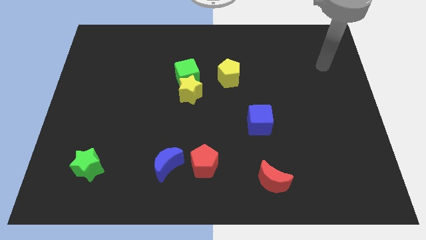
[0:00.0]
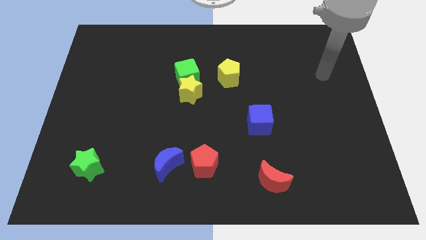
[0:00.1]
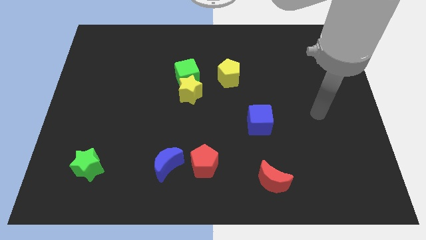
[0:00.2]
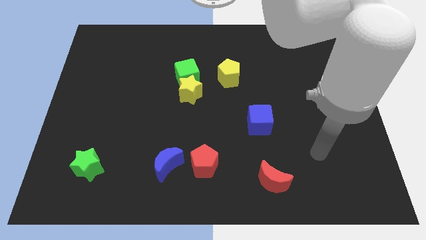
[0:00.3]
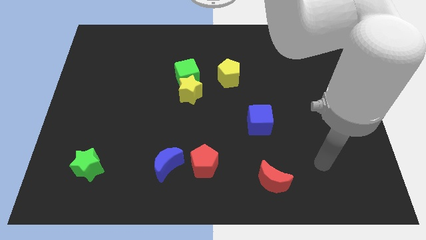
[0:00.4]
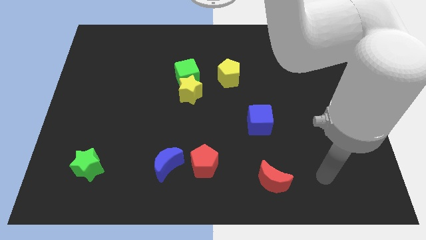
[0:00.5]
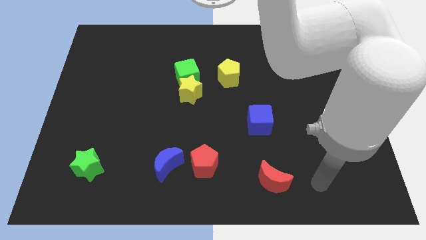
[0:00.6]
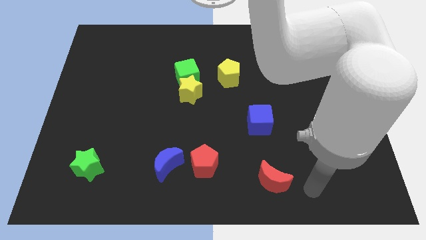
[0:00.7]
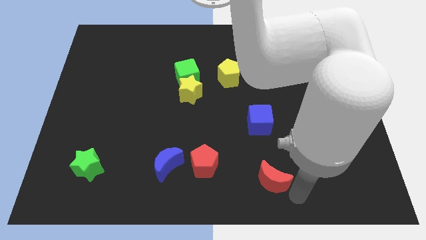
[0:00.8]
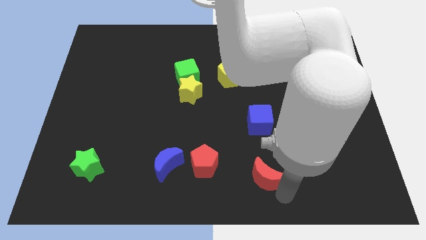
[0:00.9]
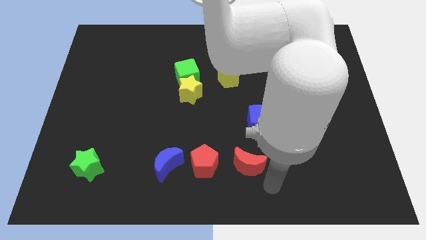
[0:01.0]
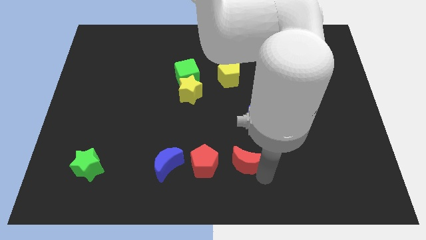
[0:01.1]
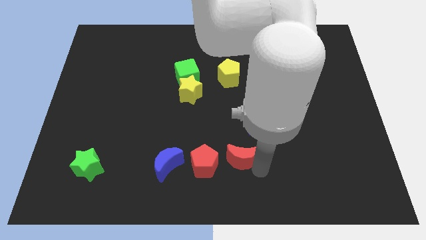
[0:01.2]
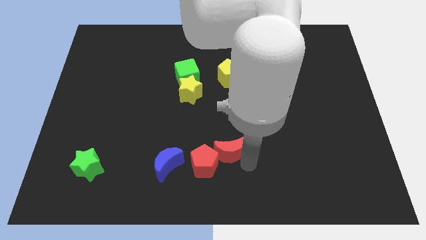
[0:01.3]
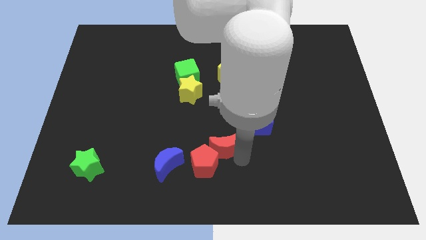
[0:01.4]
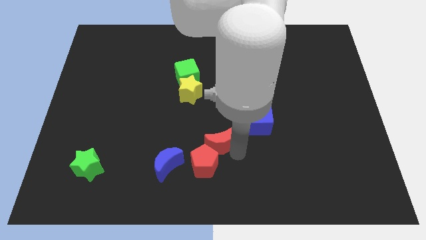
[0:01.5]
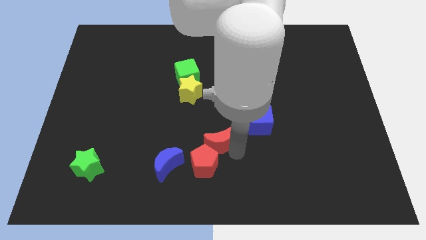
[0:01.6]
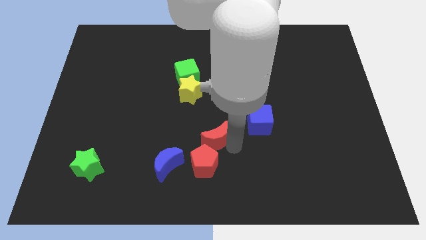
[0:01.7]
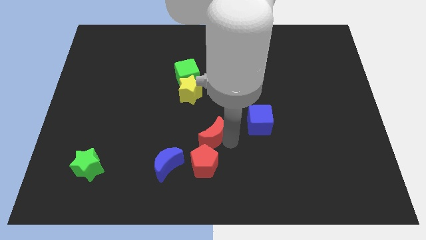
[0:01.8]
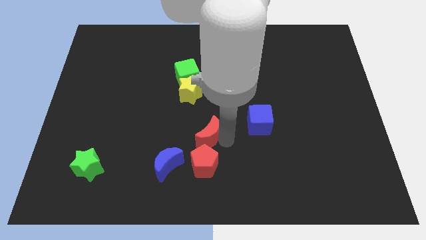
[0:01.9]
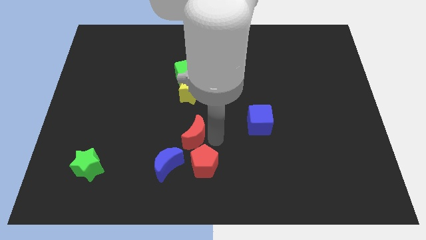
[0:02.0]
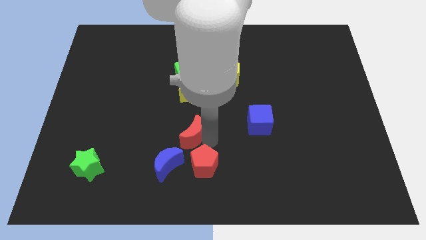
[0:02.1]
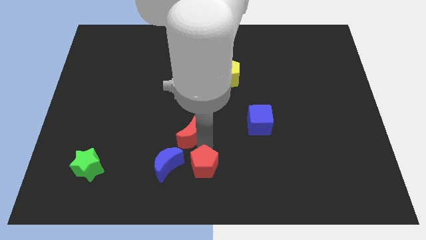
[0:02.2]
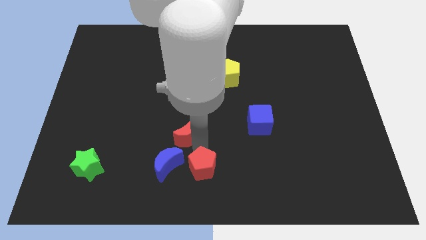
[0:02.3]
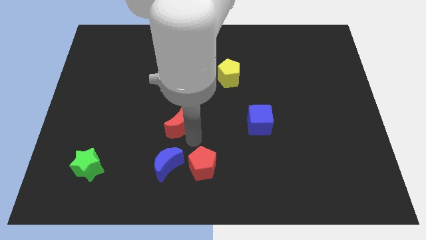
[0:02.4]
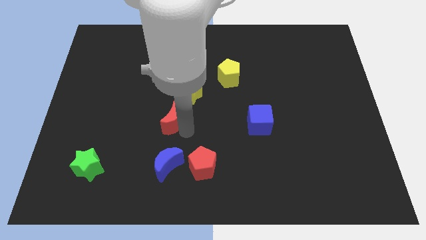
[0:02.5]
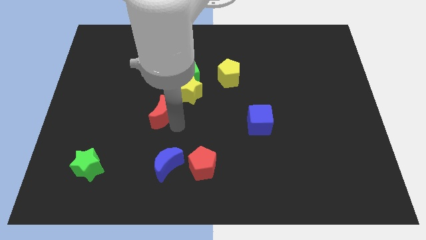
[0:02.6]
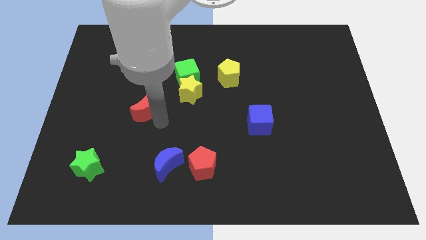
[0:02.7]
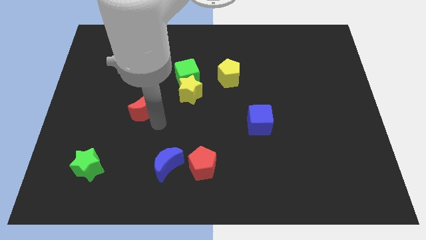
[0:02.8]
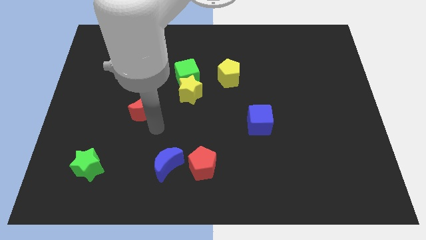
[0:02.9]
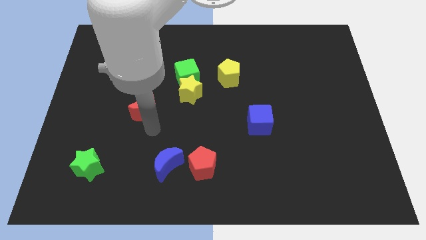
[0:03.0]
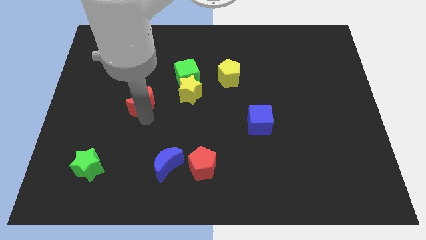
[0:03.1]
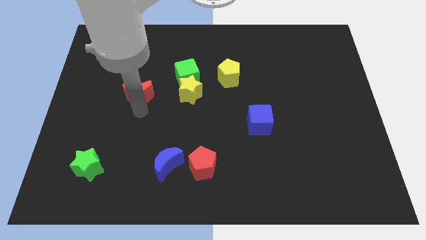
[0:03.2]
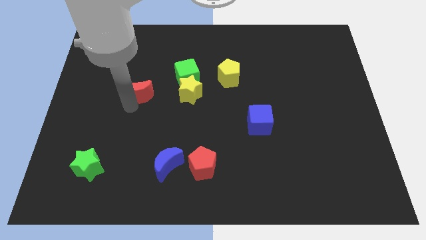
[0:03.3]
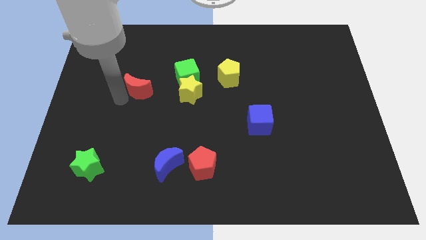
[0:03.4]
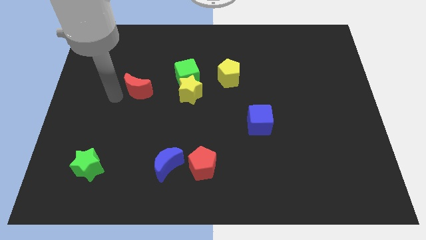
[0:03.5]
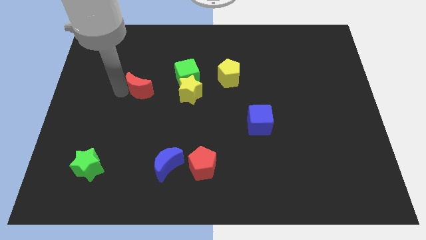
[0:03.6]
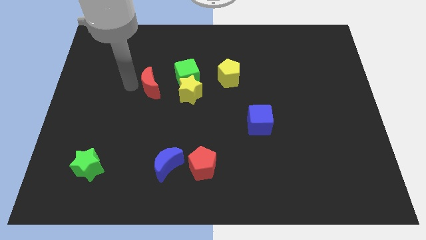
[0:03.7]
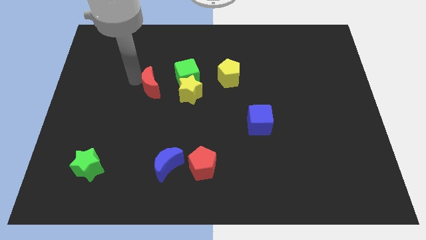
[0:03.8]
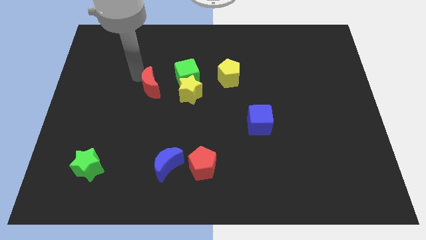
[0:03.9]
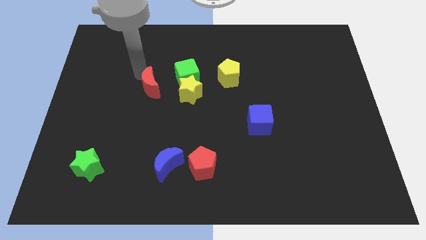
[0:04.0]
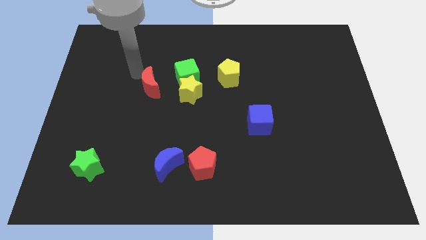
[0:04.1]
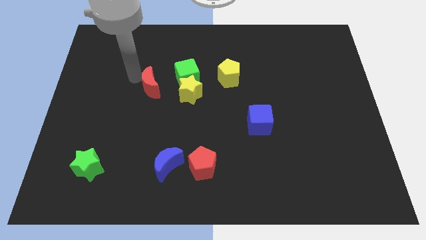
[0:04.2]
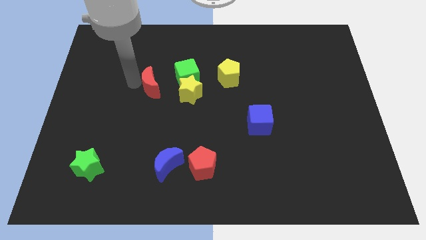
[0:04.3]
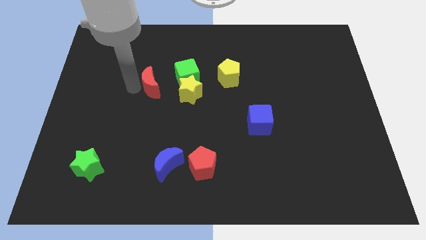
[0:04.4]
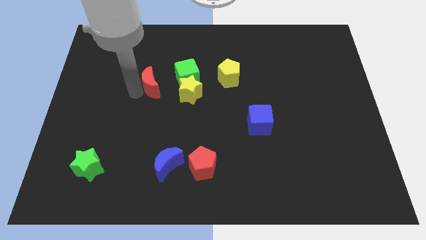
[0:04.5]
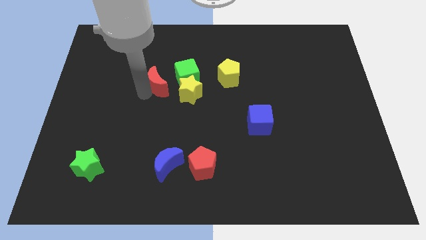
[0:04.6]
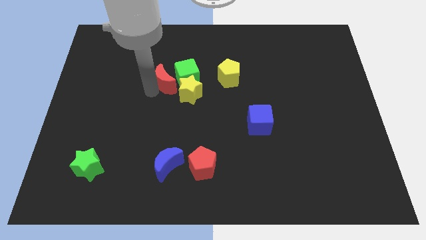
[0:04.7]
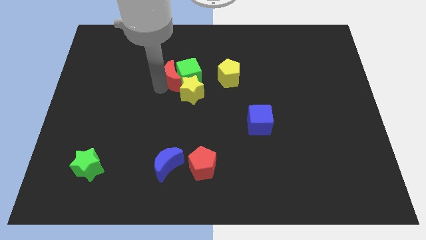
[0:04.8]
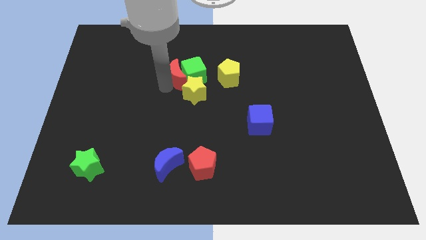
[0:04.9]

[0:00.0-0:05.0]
put the red moon close to the green cube

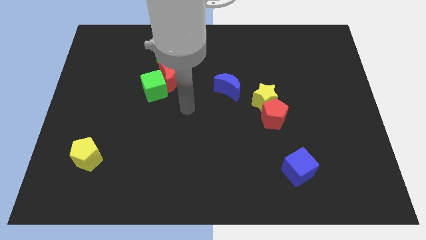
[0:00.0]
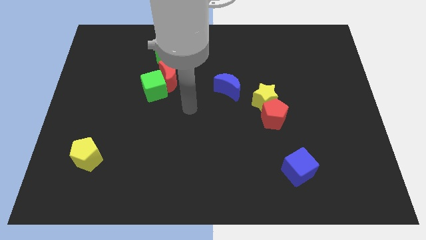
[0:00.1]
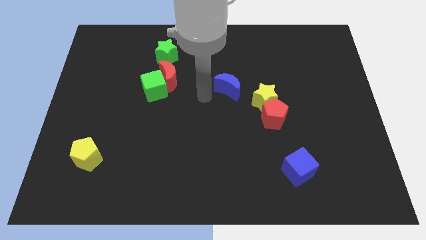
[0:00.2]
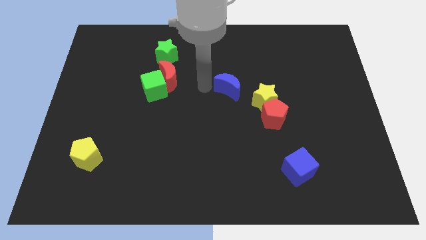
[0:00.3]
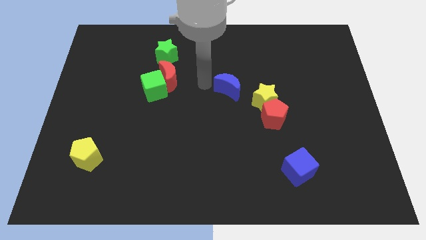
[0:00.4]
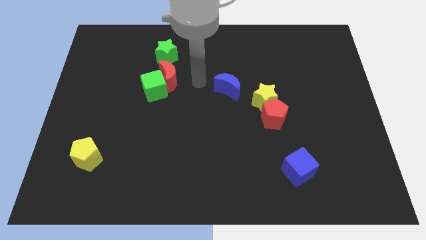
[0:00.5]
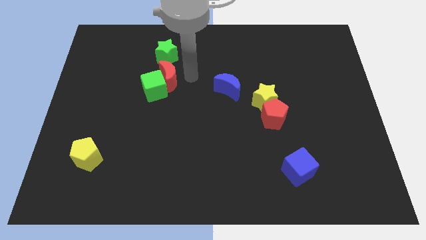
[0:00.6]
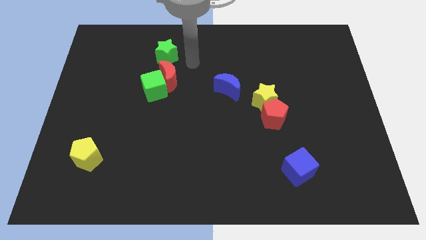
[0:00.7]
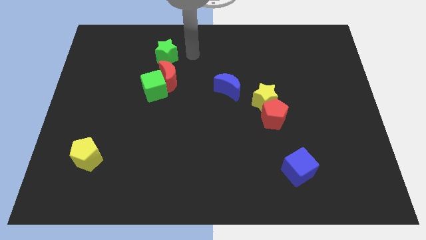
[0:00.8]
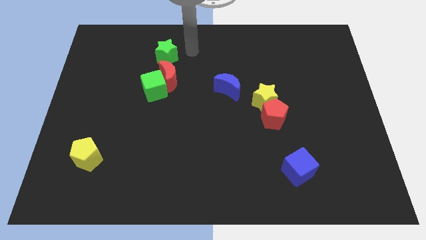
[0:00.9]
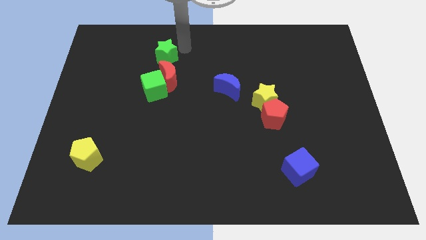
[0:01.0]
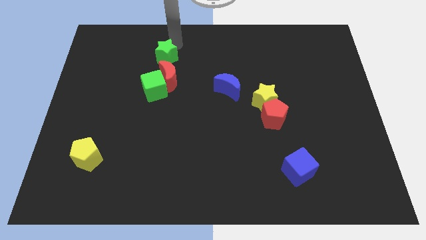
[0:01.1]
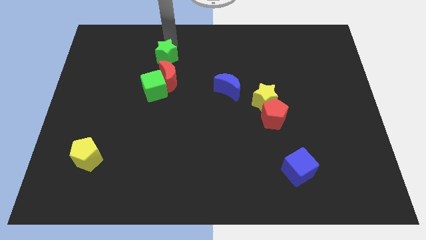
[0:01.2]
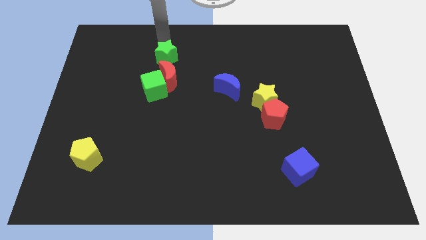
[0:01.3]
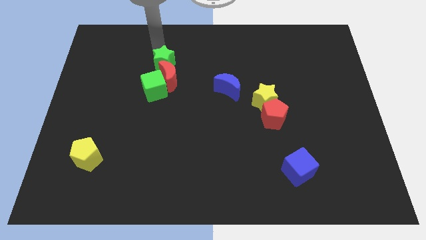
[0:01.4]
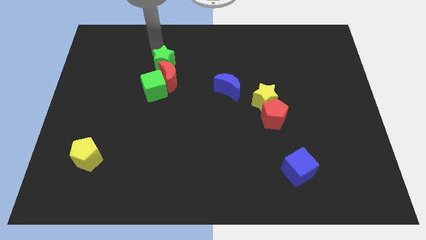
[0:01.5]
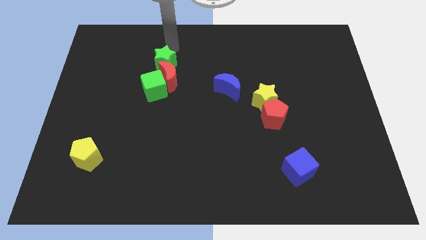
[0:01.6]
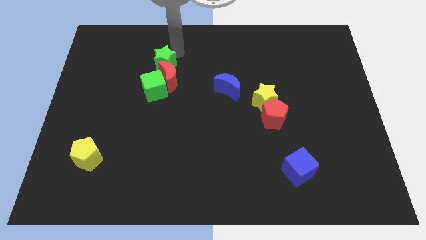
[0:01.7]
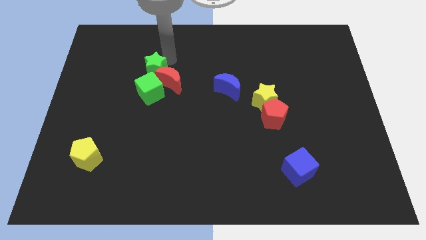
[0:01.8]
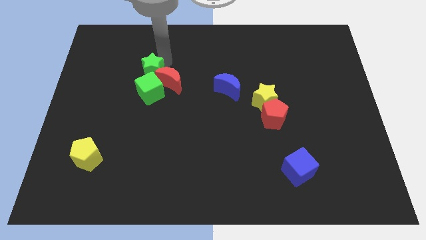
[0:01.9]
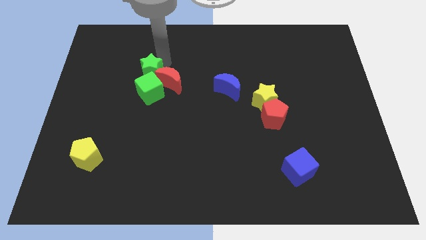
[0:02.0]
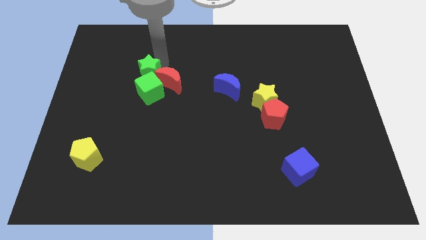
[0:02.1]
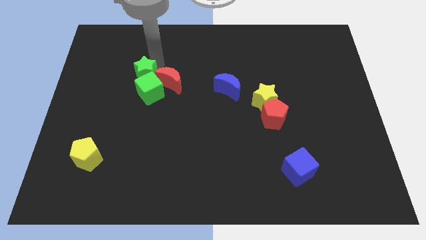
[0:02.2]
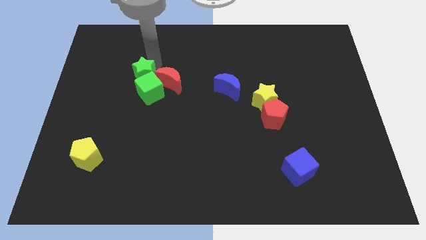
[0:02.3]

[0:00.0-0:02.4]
move the green star towards the green cube

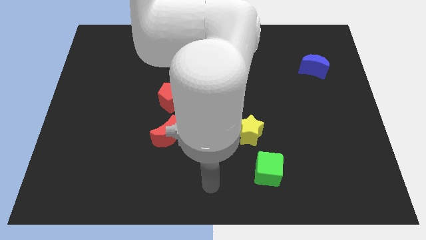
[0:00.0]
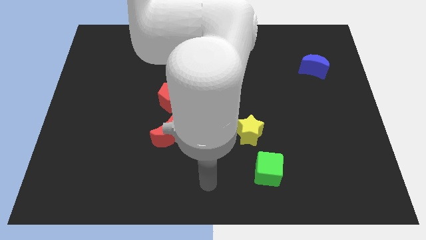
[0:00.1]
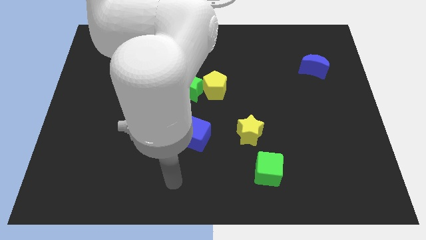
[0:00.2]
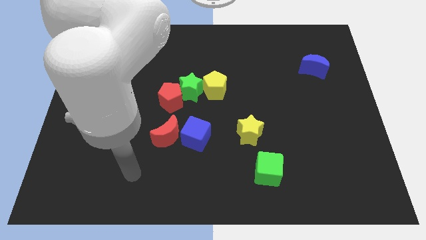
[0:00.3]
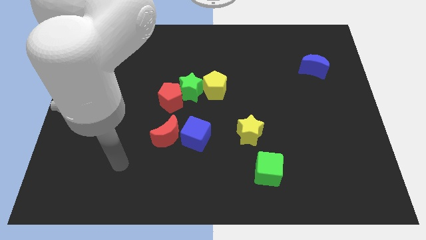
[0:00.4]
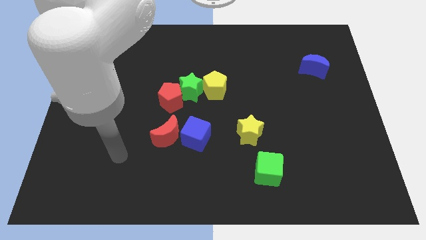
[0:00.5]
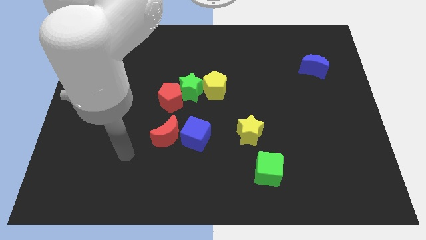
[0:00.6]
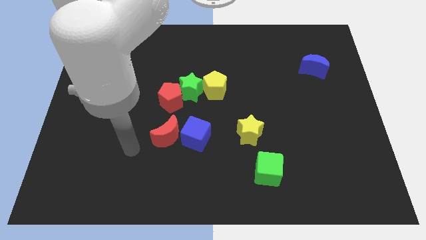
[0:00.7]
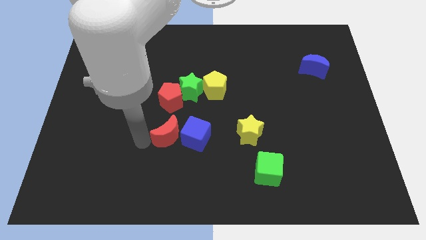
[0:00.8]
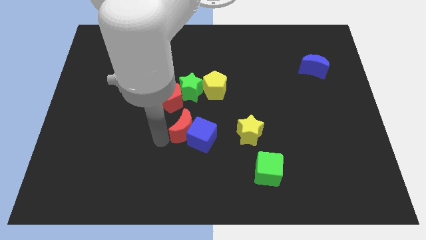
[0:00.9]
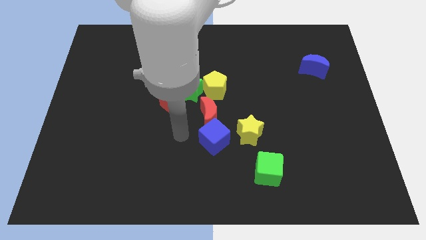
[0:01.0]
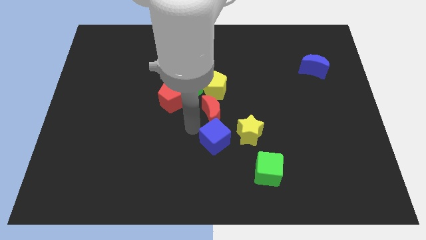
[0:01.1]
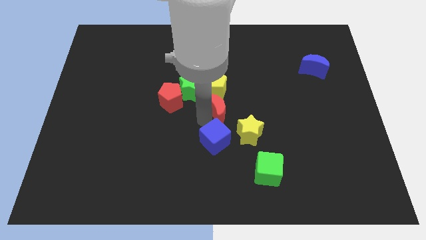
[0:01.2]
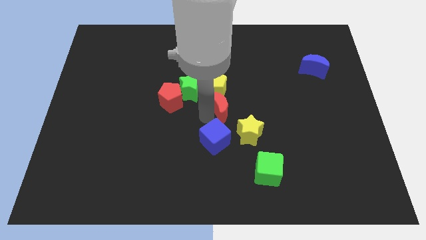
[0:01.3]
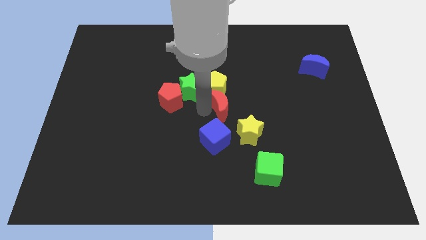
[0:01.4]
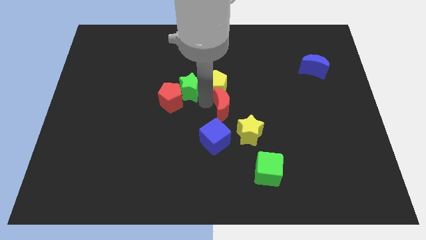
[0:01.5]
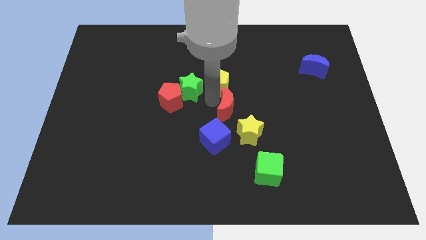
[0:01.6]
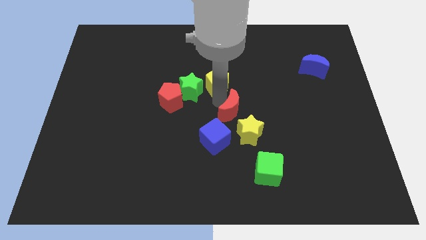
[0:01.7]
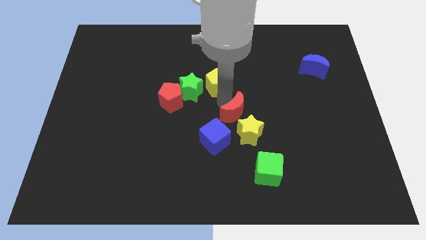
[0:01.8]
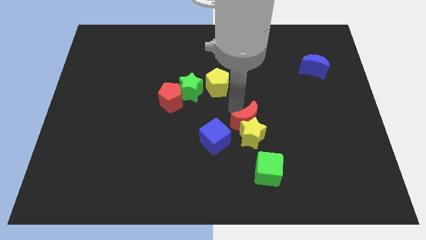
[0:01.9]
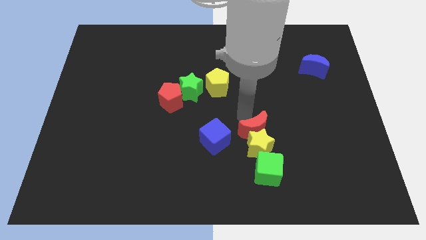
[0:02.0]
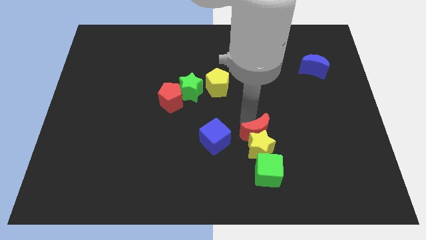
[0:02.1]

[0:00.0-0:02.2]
put the red moon towards the yellow star
